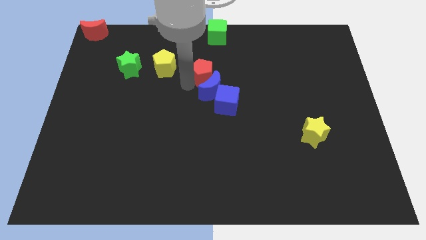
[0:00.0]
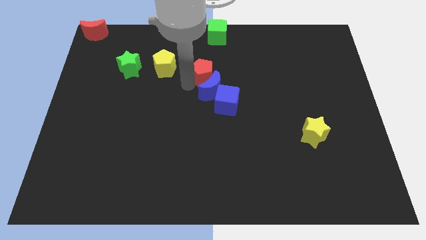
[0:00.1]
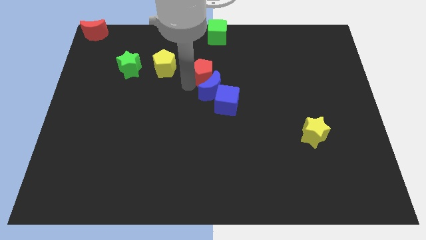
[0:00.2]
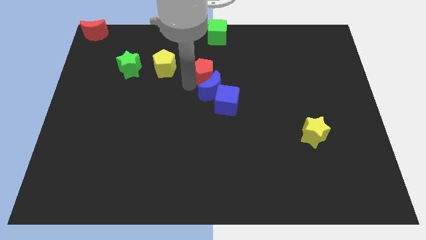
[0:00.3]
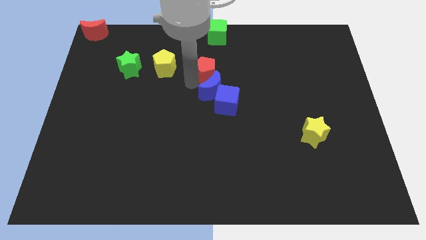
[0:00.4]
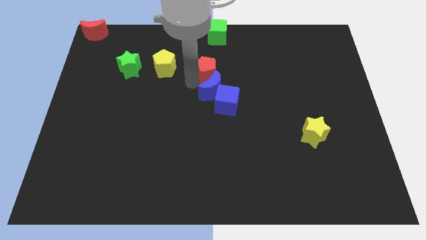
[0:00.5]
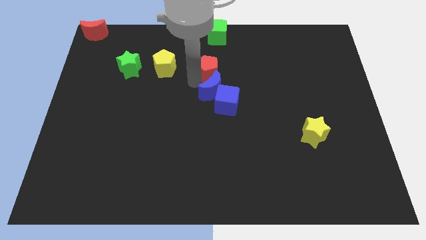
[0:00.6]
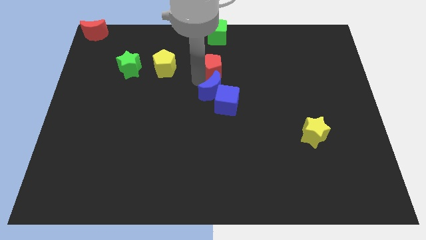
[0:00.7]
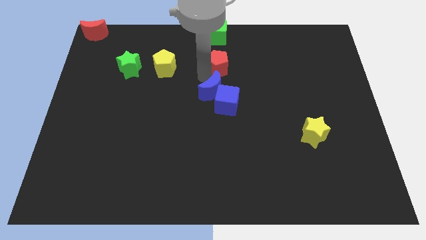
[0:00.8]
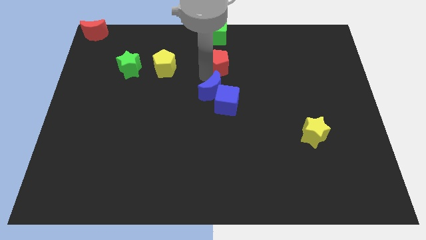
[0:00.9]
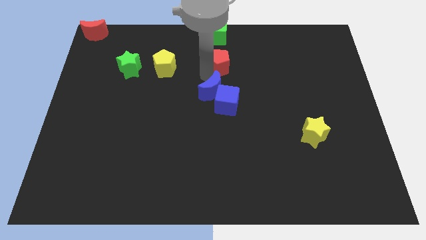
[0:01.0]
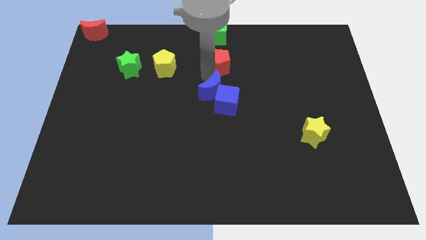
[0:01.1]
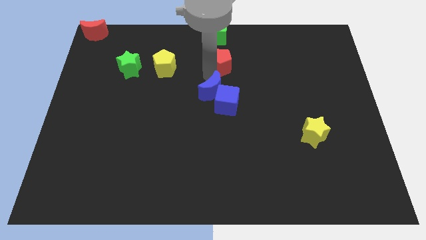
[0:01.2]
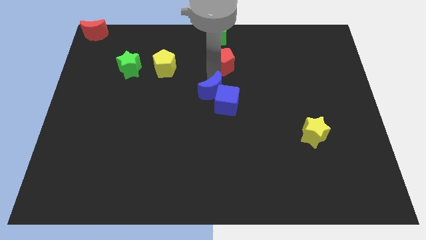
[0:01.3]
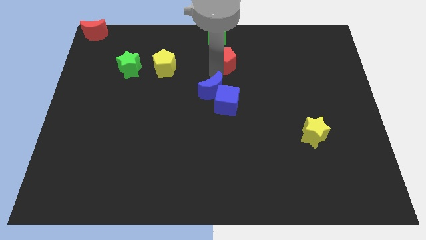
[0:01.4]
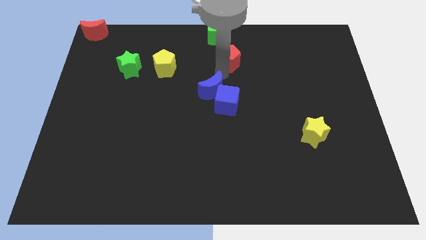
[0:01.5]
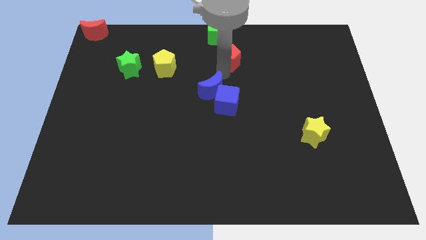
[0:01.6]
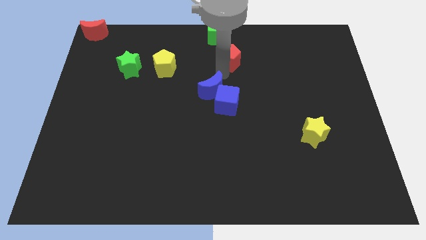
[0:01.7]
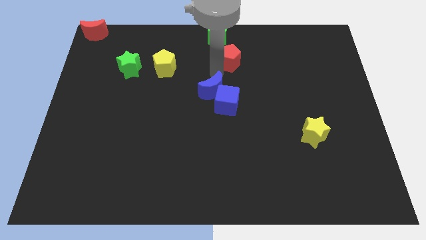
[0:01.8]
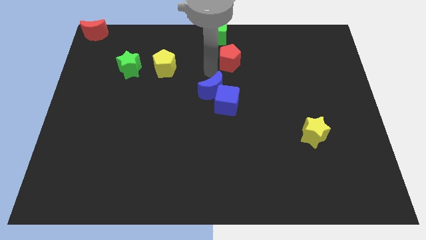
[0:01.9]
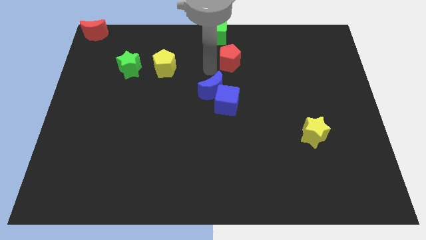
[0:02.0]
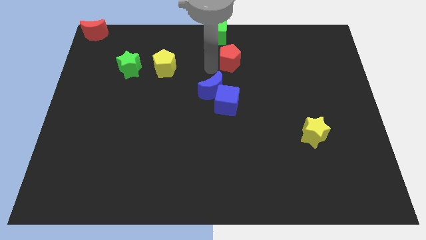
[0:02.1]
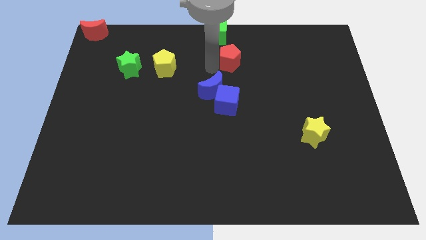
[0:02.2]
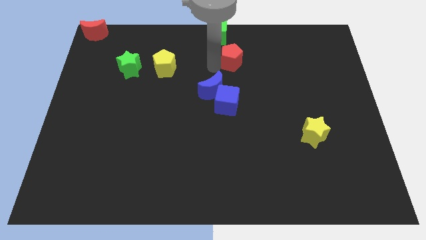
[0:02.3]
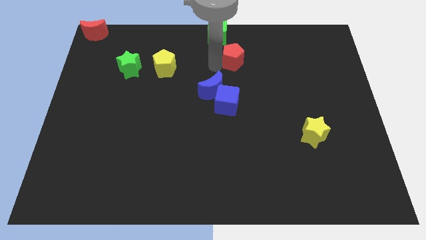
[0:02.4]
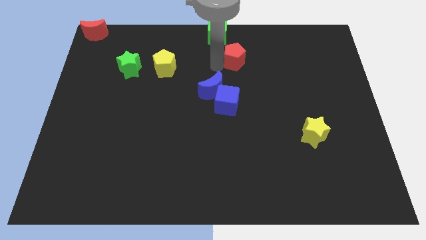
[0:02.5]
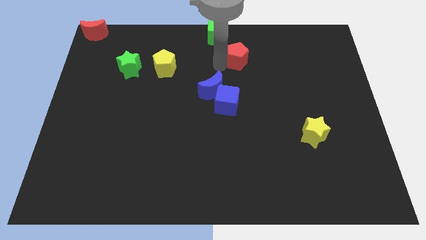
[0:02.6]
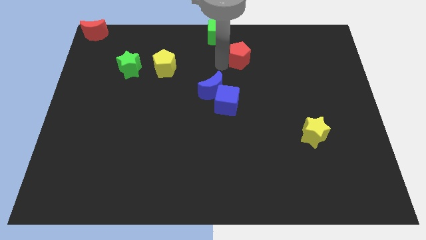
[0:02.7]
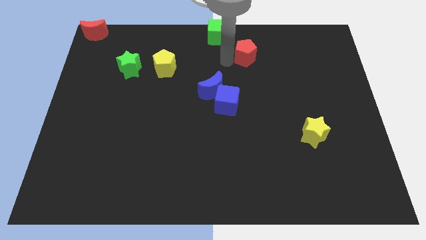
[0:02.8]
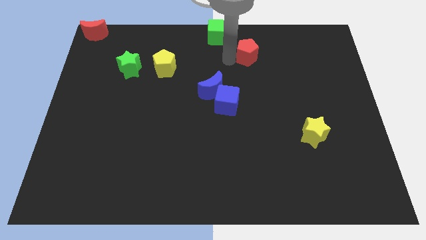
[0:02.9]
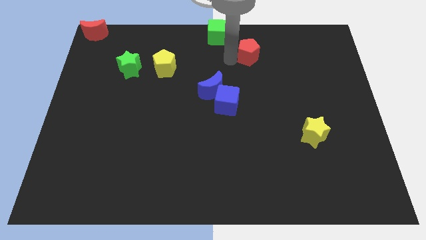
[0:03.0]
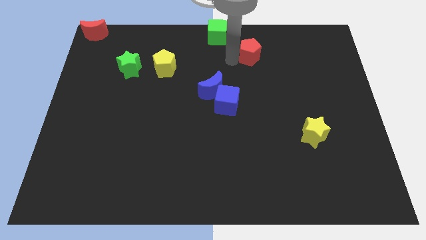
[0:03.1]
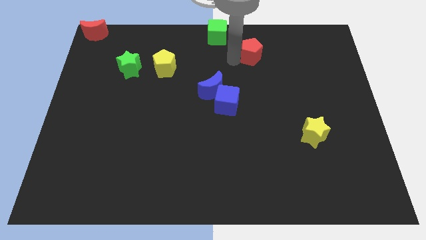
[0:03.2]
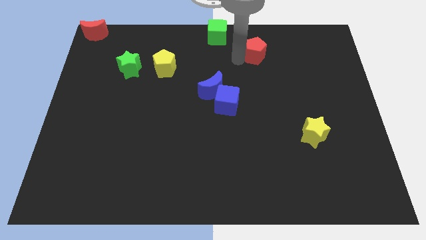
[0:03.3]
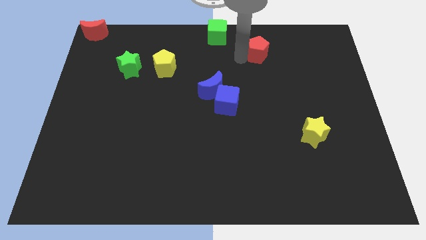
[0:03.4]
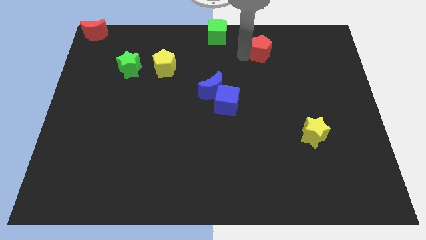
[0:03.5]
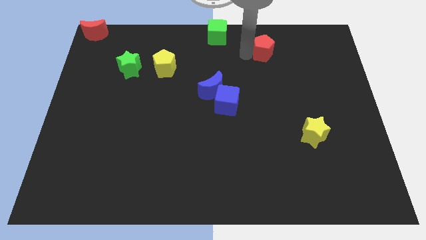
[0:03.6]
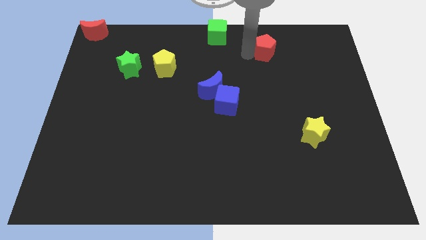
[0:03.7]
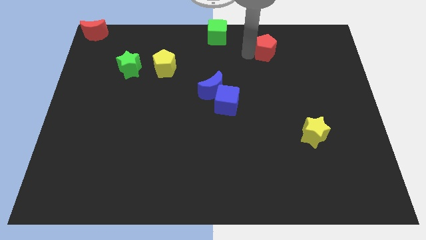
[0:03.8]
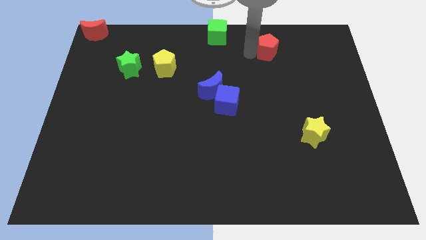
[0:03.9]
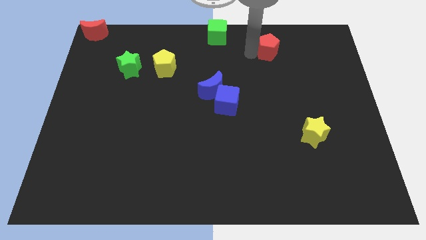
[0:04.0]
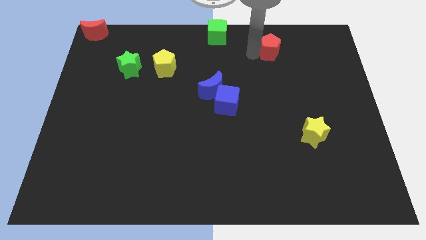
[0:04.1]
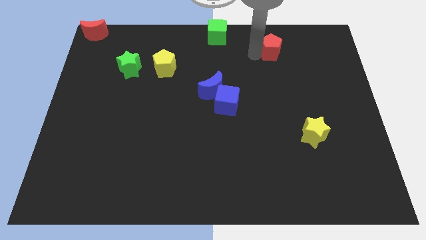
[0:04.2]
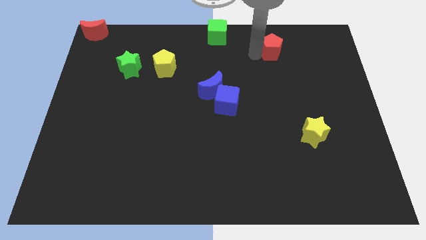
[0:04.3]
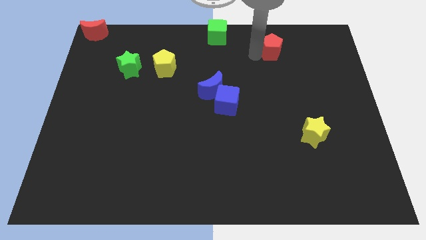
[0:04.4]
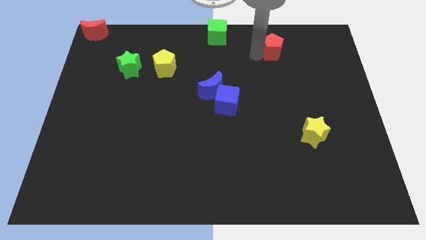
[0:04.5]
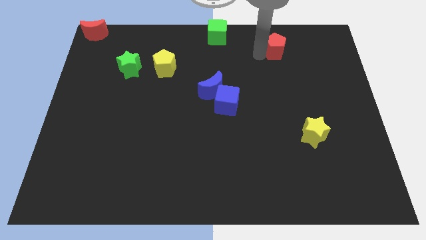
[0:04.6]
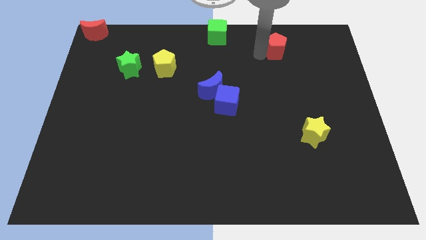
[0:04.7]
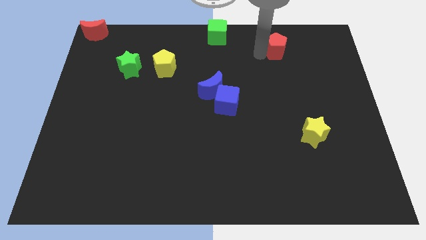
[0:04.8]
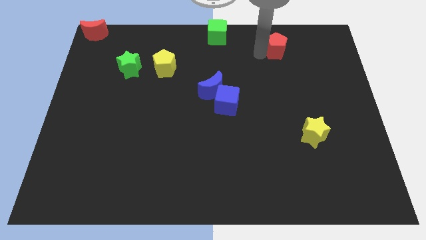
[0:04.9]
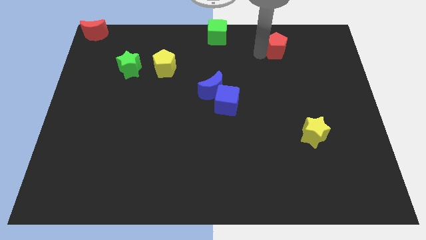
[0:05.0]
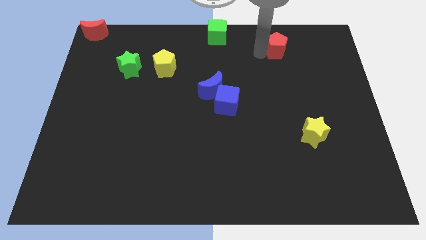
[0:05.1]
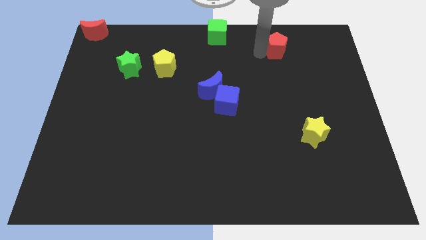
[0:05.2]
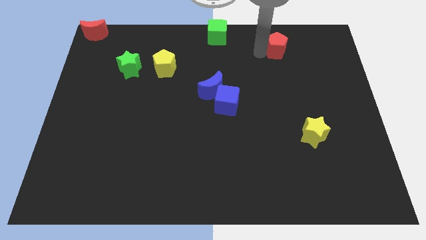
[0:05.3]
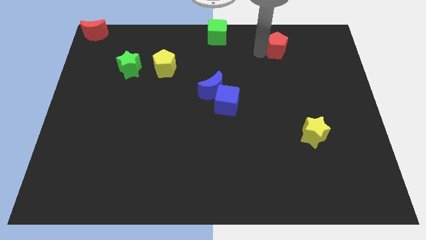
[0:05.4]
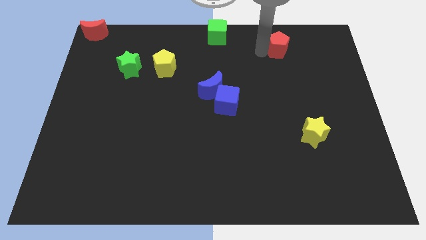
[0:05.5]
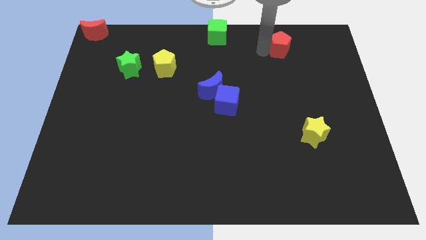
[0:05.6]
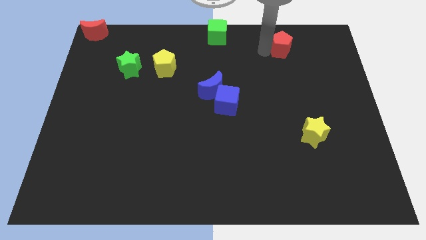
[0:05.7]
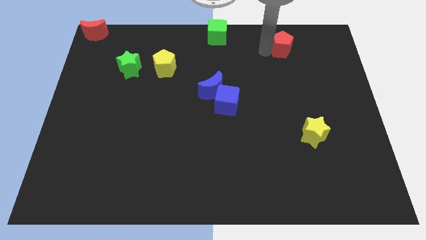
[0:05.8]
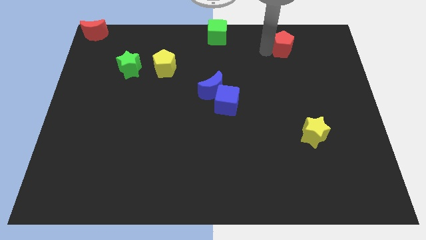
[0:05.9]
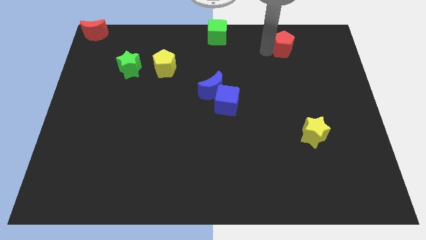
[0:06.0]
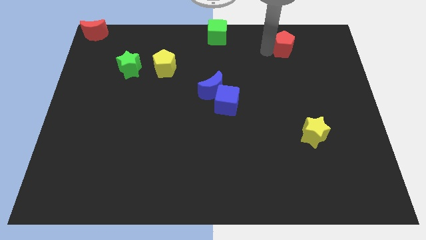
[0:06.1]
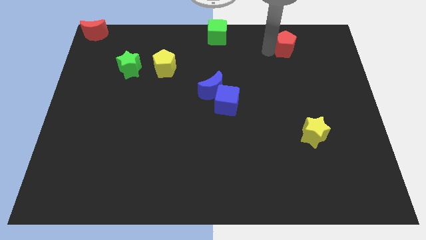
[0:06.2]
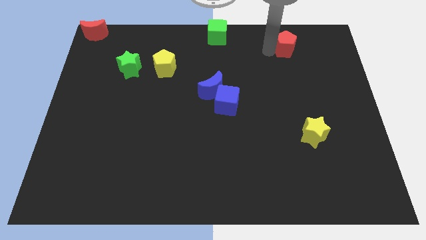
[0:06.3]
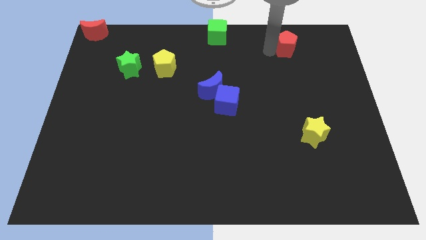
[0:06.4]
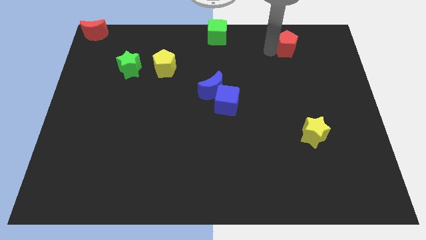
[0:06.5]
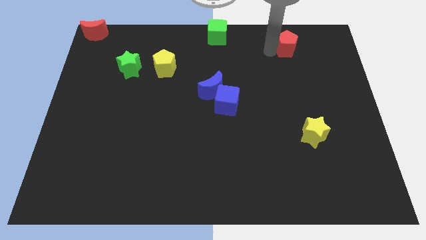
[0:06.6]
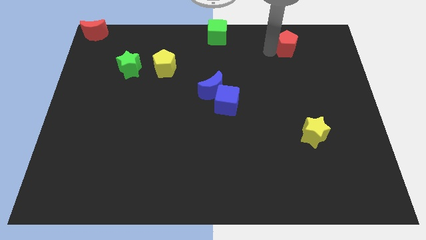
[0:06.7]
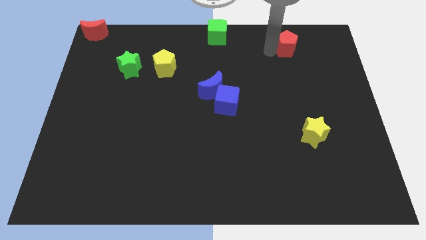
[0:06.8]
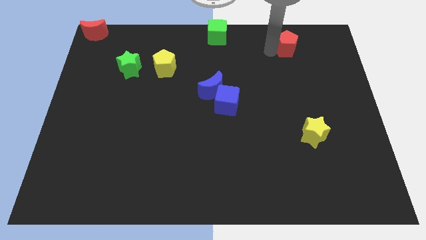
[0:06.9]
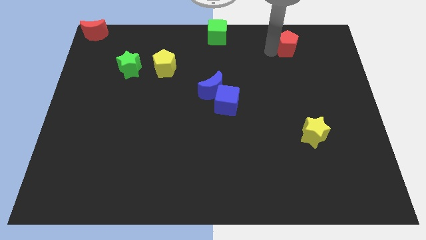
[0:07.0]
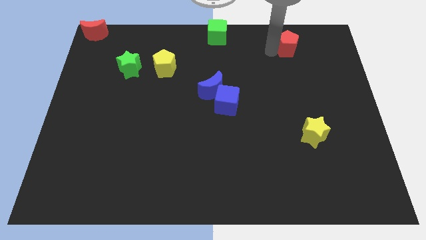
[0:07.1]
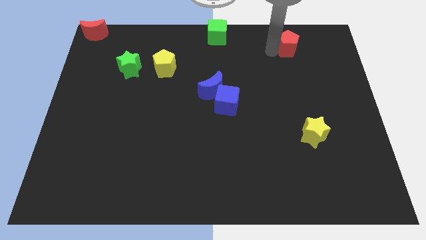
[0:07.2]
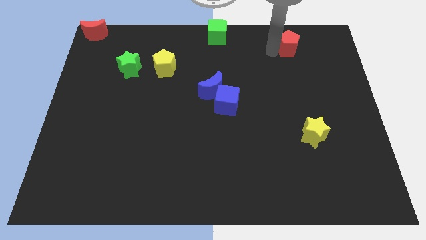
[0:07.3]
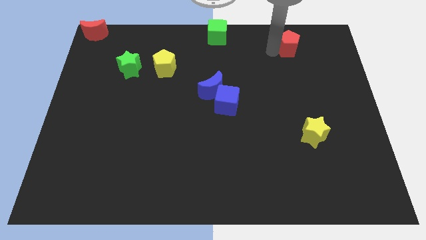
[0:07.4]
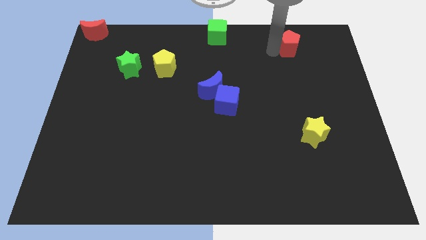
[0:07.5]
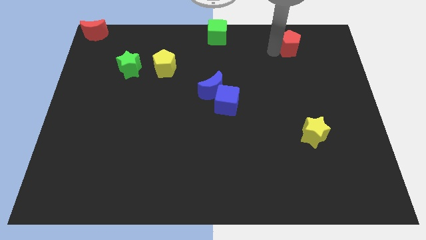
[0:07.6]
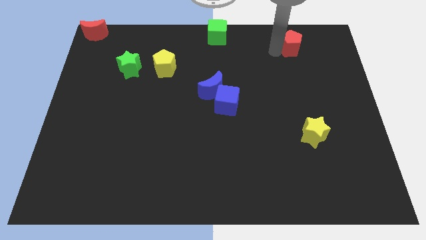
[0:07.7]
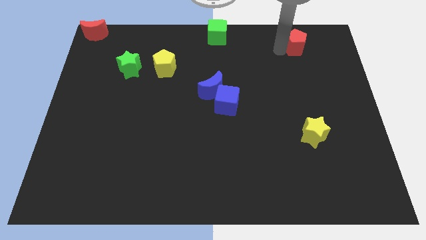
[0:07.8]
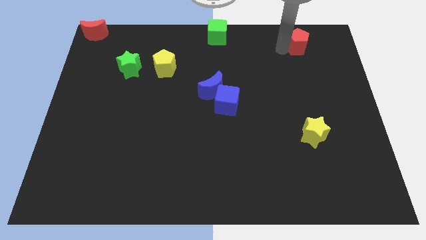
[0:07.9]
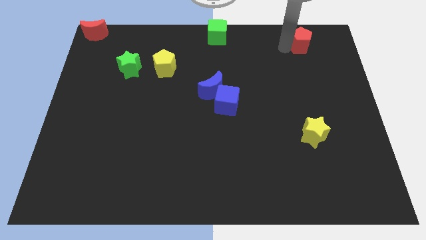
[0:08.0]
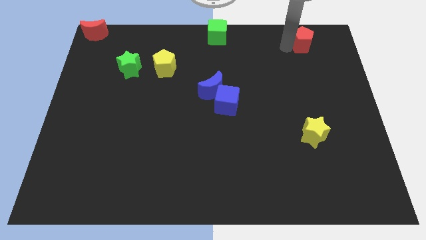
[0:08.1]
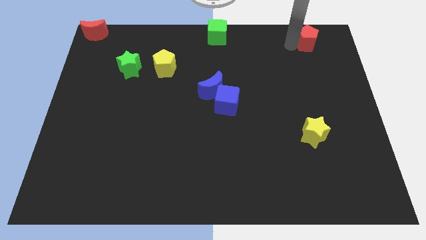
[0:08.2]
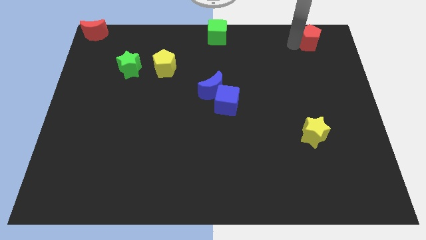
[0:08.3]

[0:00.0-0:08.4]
place the red pentagon above the yellow star

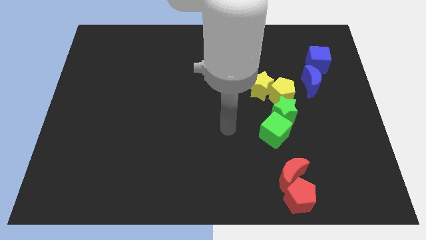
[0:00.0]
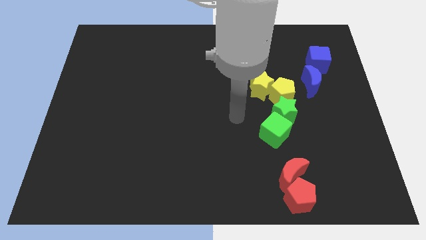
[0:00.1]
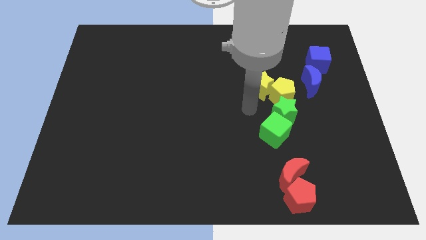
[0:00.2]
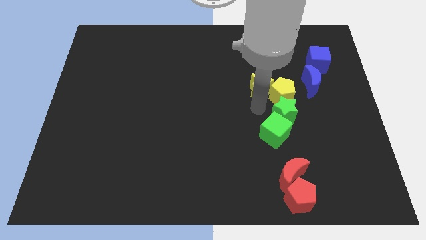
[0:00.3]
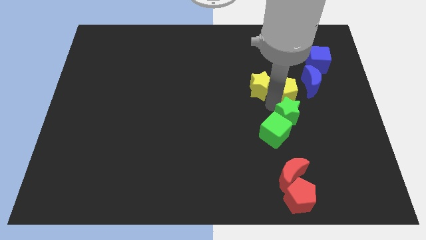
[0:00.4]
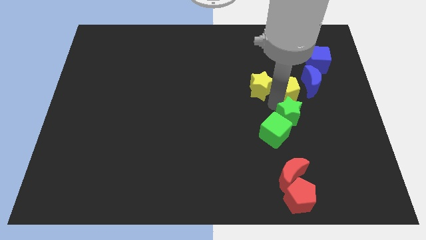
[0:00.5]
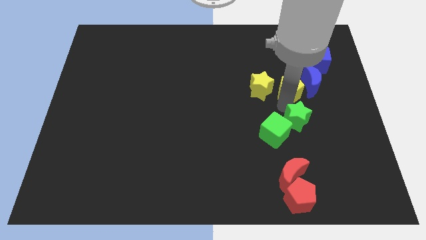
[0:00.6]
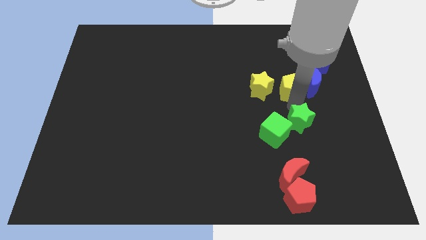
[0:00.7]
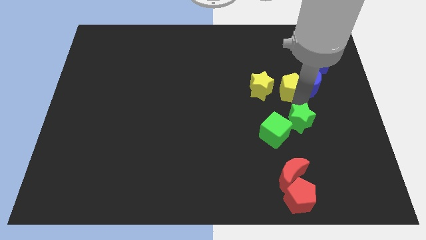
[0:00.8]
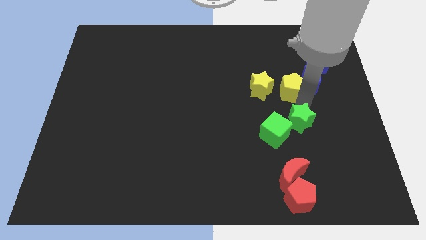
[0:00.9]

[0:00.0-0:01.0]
separate the green star and yellow pentagon from each other
